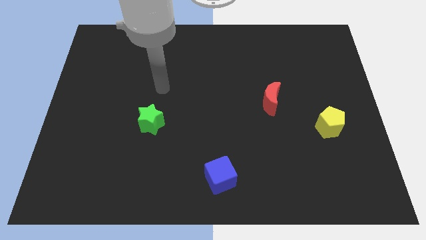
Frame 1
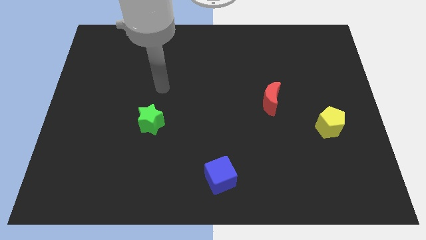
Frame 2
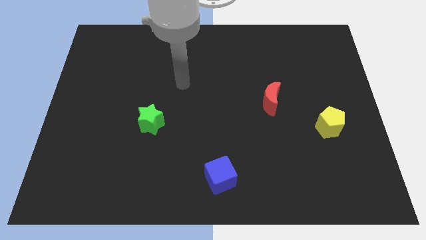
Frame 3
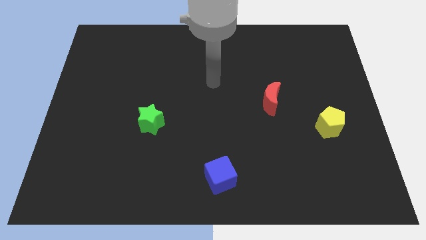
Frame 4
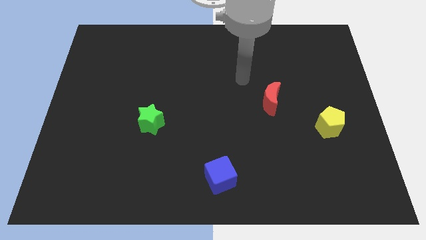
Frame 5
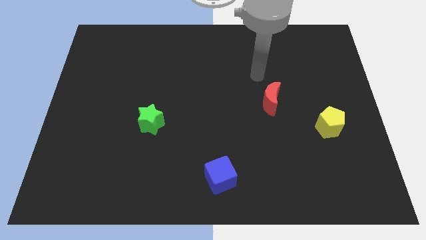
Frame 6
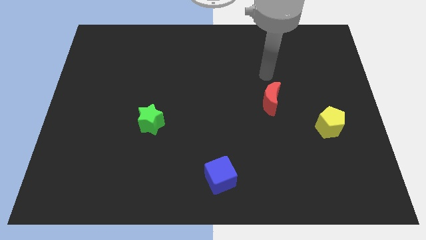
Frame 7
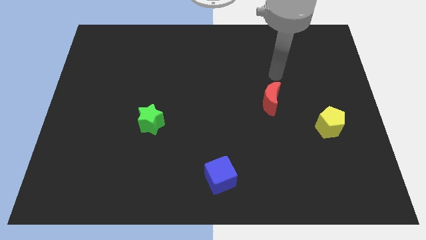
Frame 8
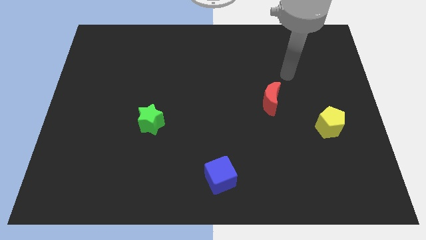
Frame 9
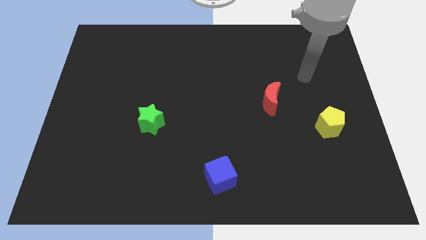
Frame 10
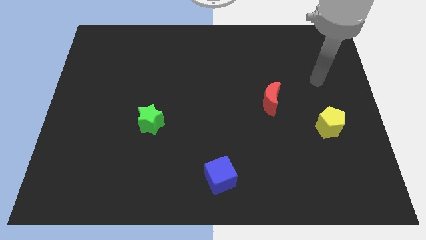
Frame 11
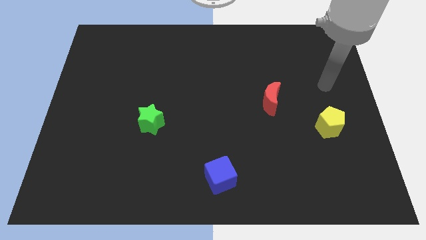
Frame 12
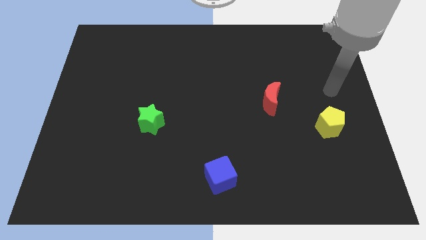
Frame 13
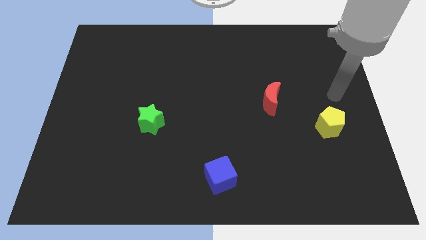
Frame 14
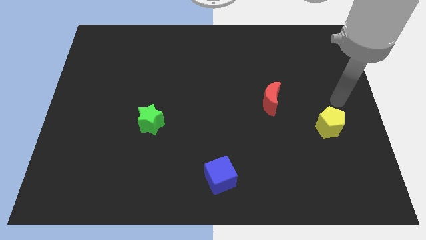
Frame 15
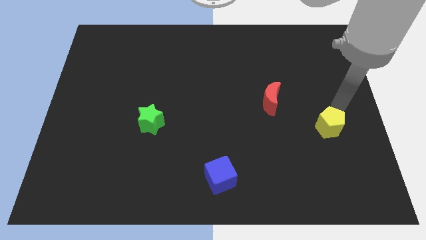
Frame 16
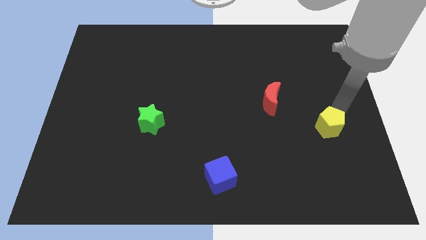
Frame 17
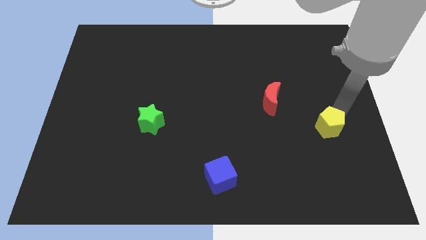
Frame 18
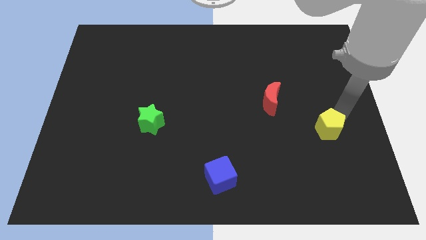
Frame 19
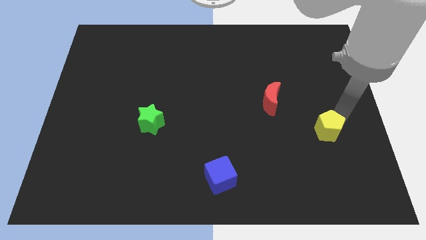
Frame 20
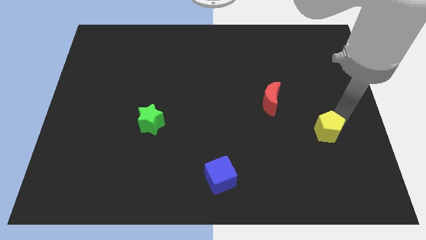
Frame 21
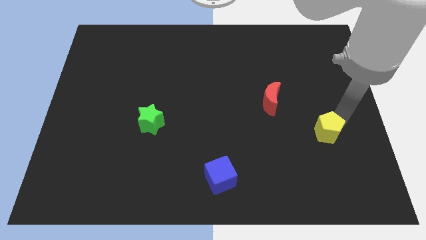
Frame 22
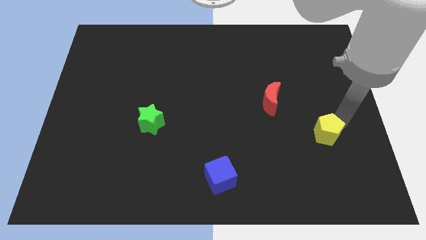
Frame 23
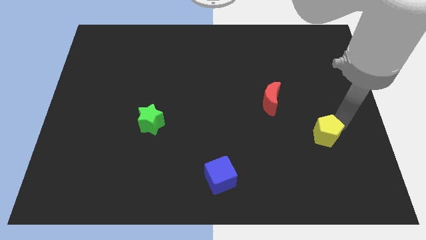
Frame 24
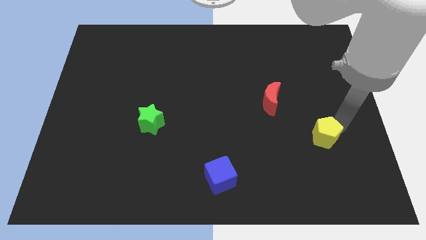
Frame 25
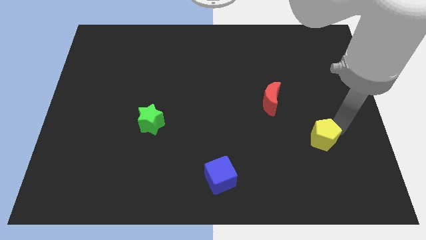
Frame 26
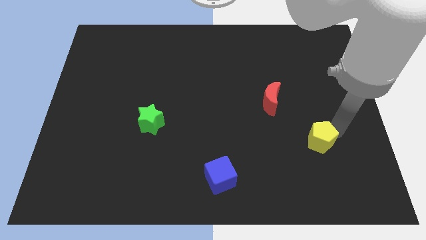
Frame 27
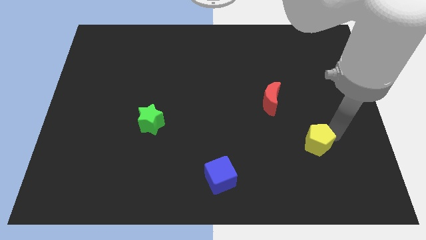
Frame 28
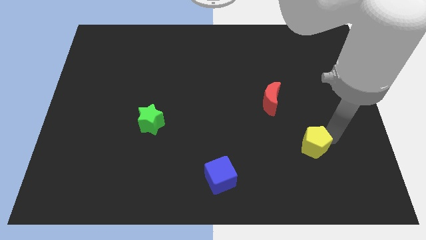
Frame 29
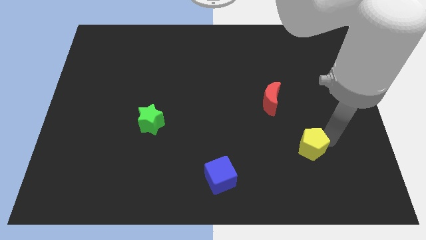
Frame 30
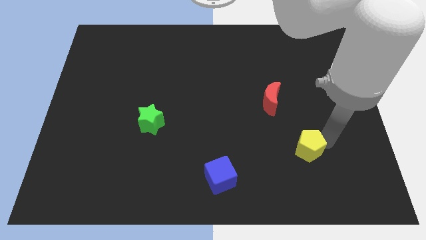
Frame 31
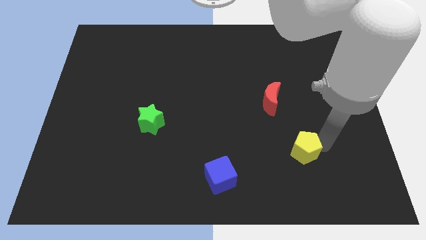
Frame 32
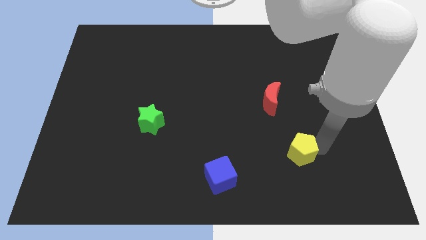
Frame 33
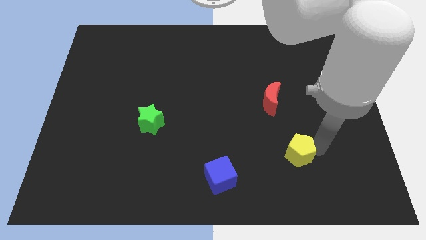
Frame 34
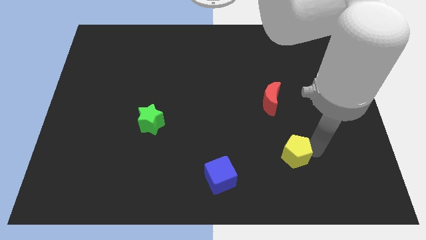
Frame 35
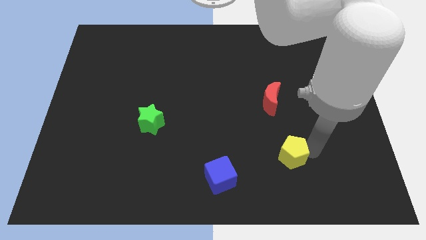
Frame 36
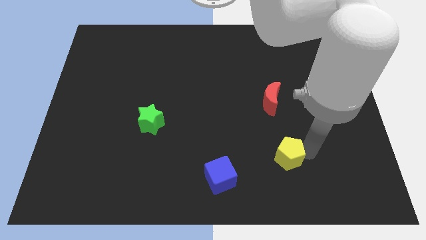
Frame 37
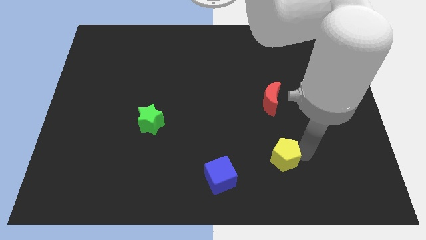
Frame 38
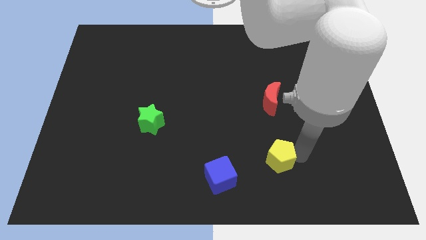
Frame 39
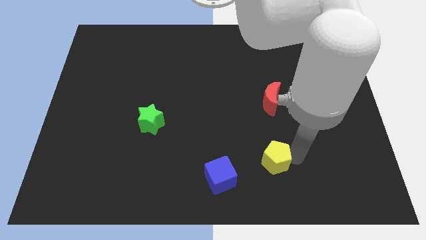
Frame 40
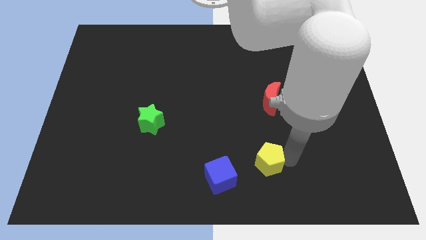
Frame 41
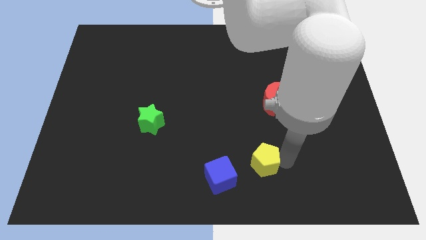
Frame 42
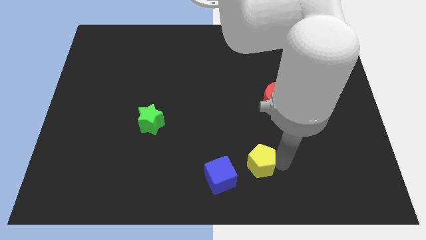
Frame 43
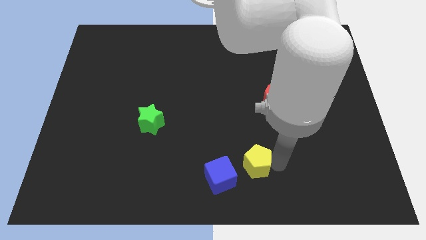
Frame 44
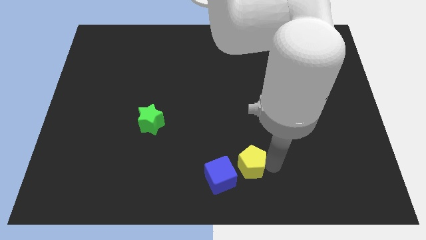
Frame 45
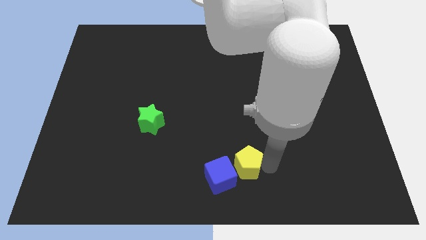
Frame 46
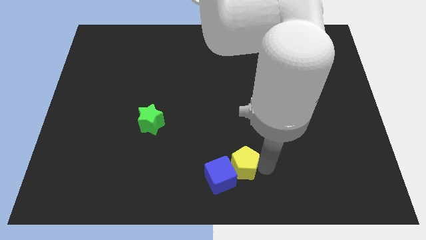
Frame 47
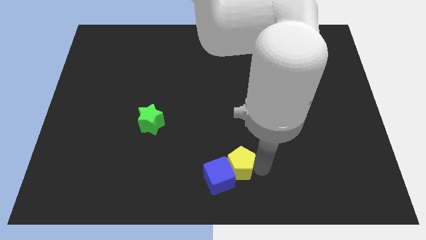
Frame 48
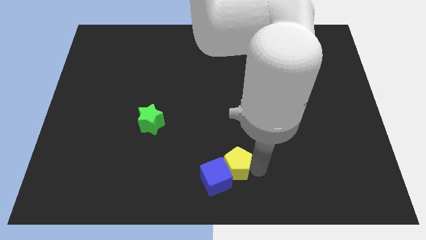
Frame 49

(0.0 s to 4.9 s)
slide the yellow pentagon towards the blue block

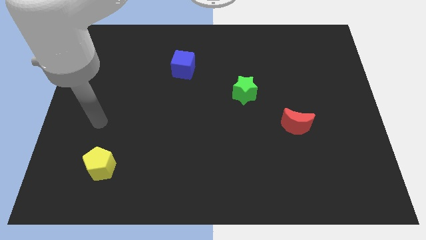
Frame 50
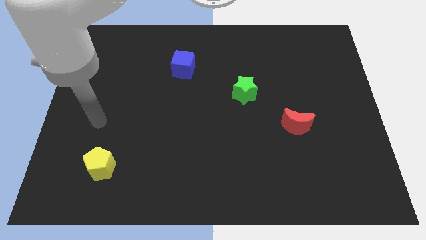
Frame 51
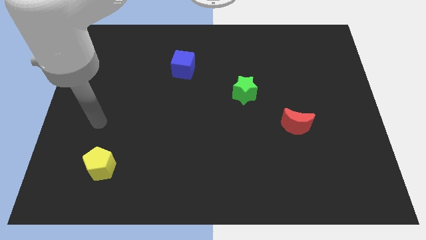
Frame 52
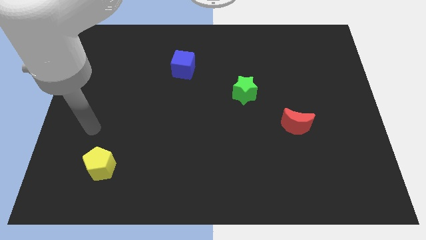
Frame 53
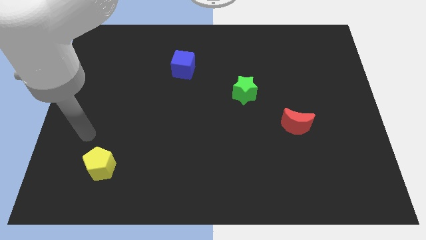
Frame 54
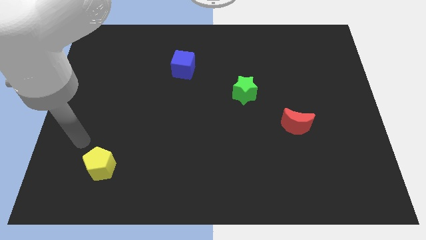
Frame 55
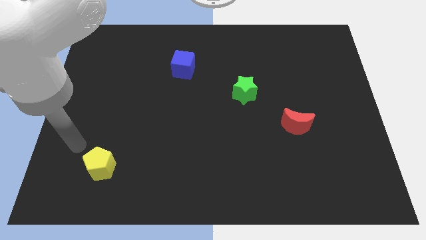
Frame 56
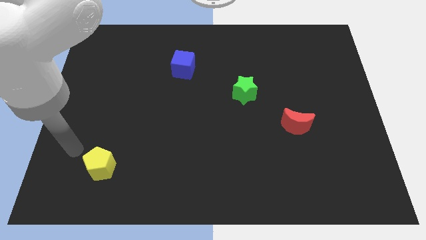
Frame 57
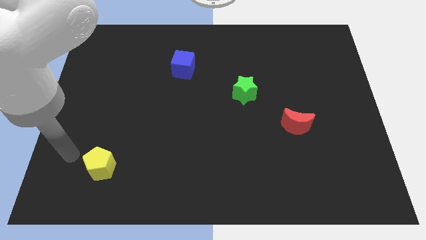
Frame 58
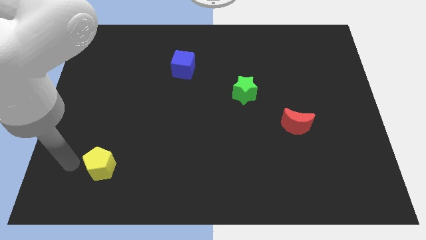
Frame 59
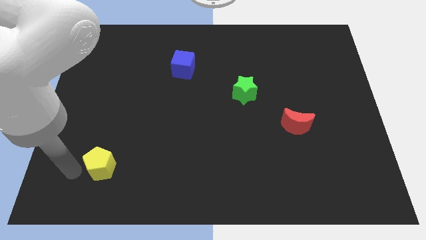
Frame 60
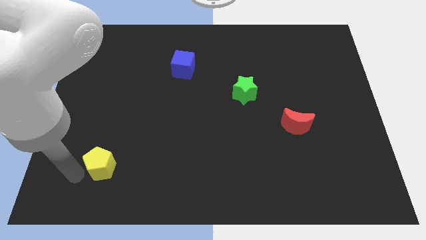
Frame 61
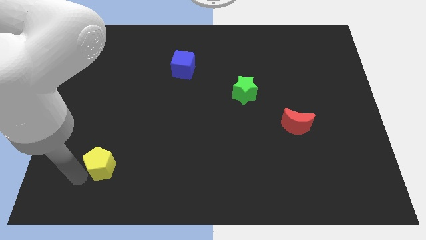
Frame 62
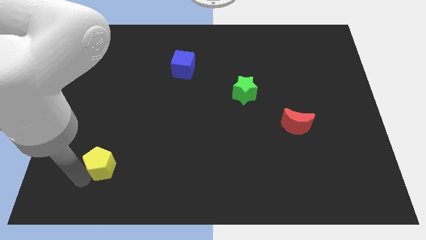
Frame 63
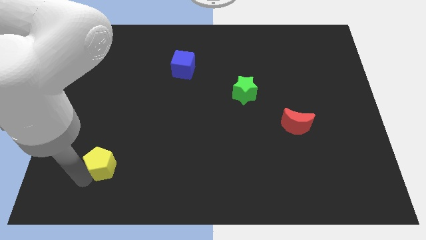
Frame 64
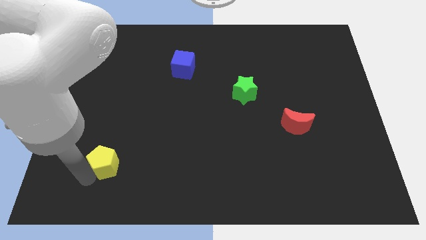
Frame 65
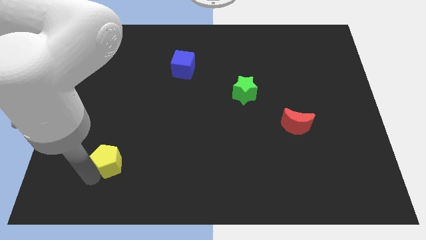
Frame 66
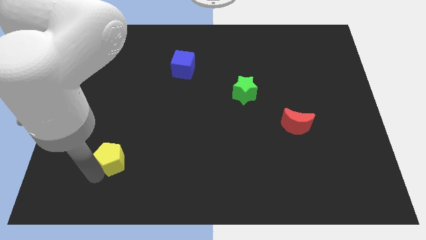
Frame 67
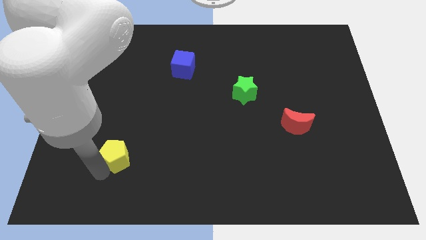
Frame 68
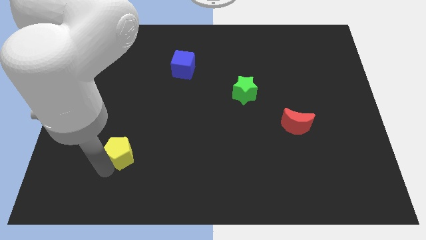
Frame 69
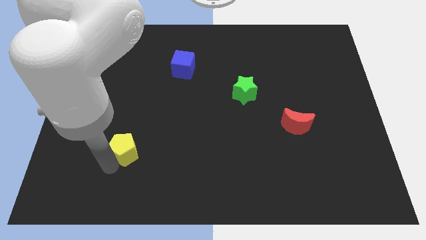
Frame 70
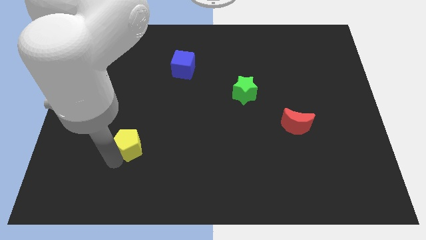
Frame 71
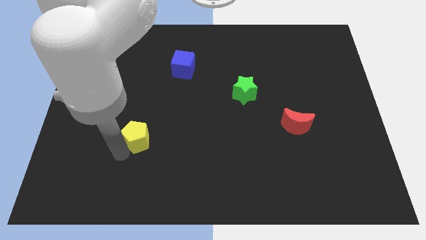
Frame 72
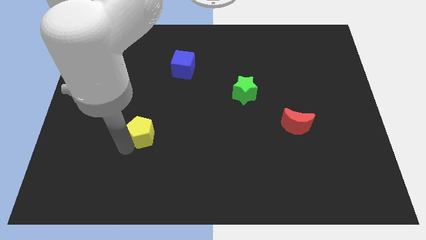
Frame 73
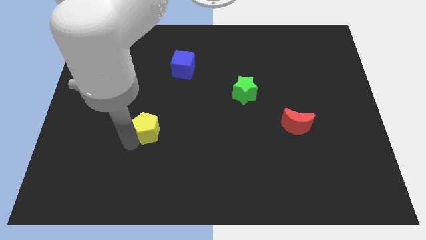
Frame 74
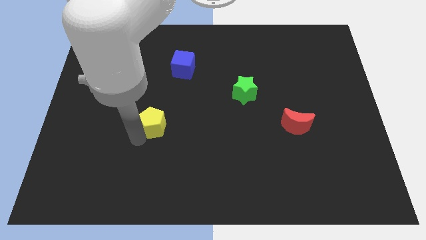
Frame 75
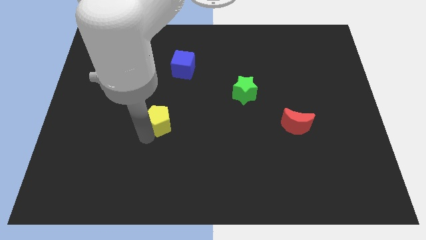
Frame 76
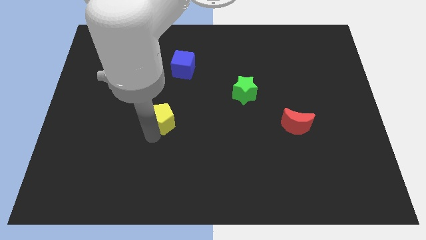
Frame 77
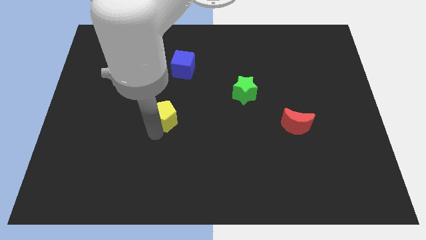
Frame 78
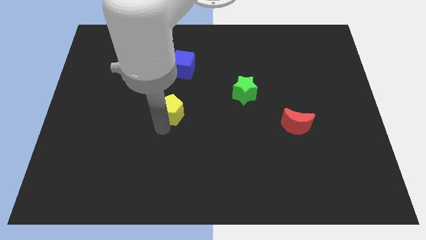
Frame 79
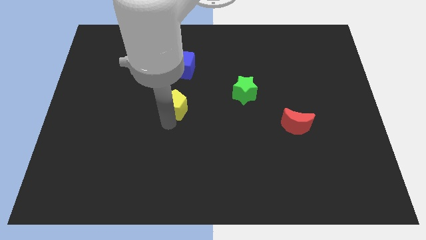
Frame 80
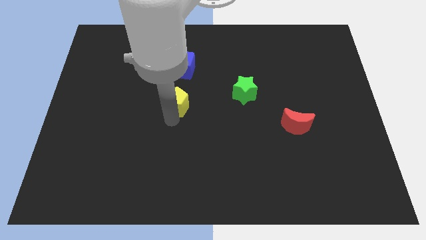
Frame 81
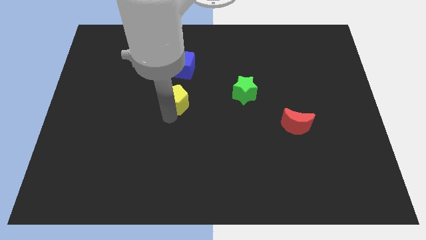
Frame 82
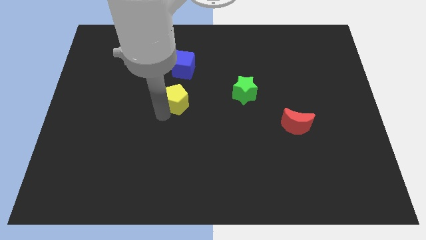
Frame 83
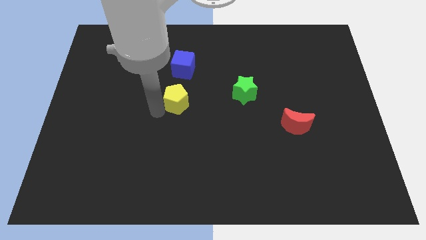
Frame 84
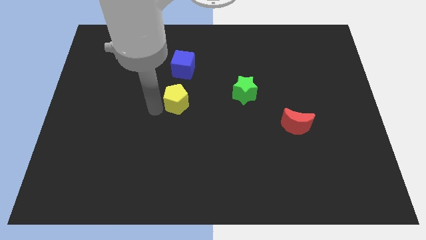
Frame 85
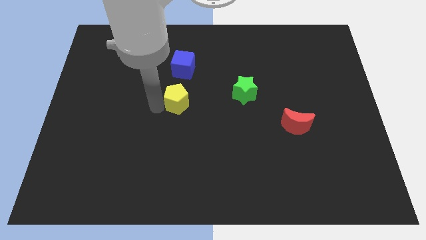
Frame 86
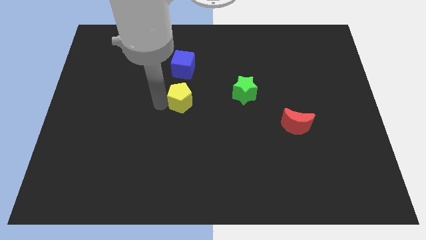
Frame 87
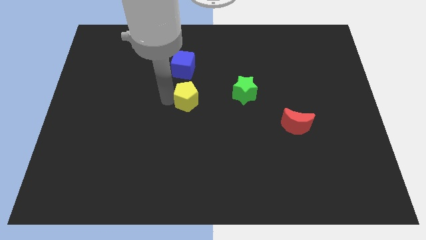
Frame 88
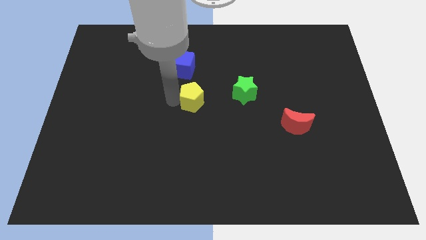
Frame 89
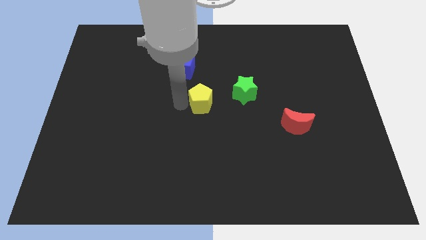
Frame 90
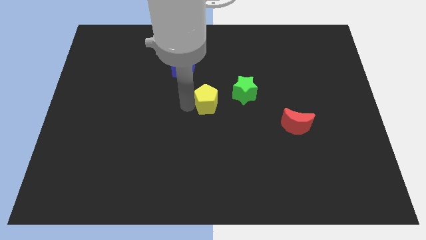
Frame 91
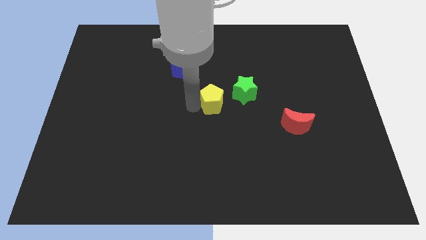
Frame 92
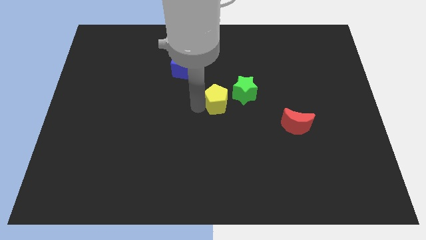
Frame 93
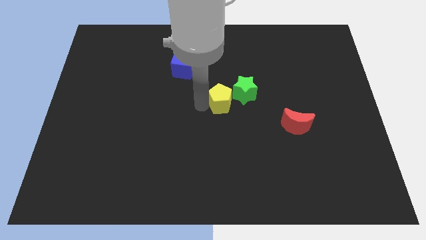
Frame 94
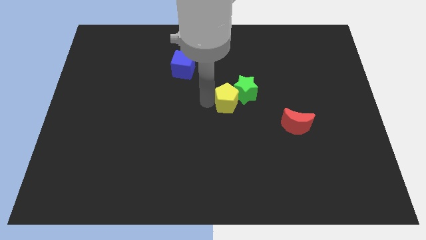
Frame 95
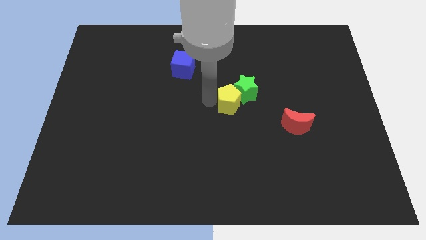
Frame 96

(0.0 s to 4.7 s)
push the pentagon towards the green star
